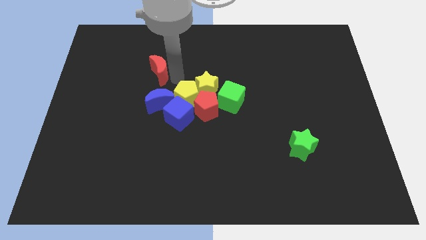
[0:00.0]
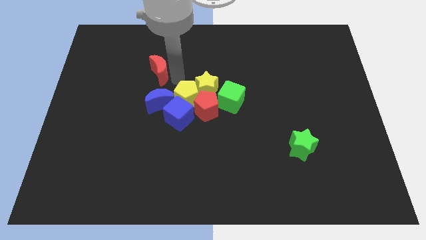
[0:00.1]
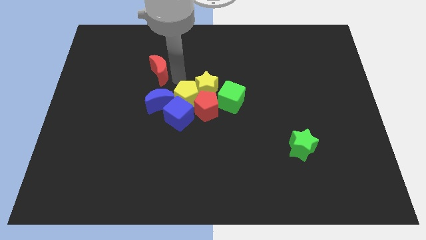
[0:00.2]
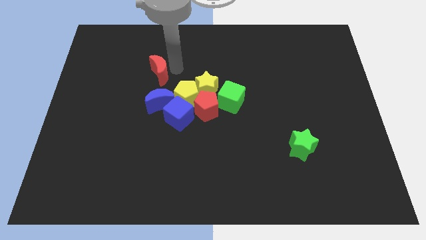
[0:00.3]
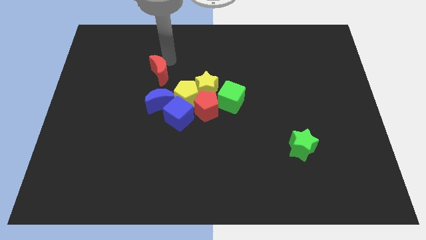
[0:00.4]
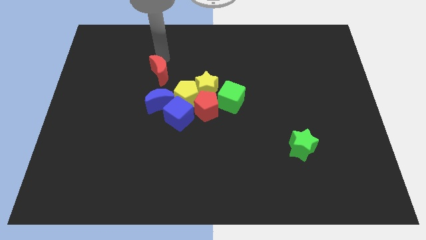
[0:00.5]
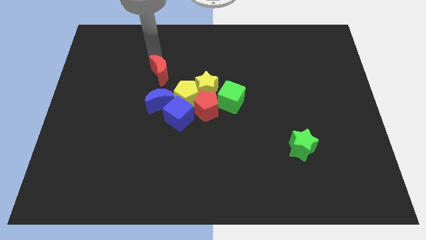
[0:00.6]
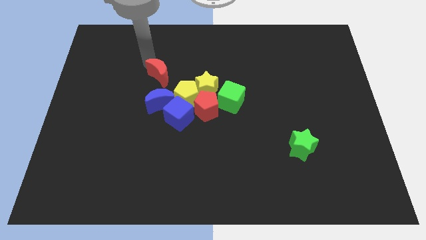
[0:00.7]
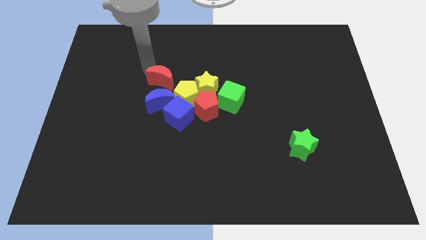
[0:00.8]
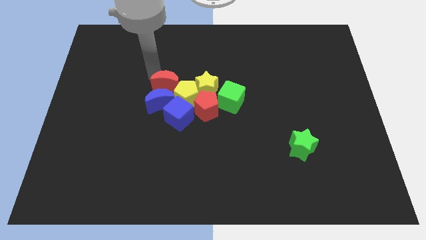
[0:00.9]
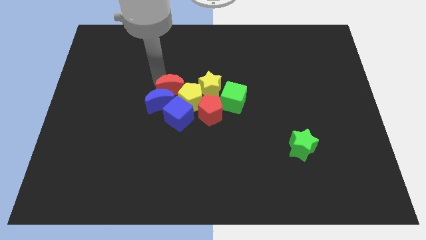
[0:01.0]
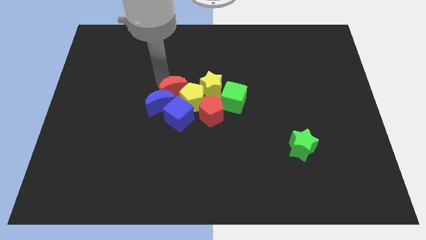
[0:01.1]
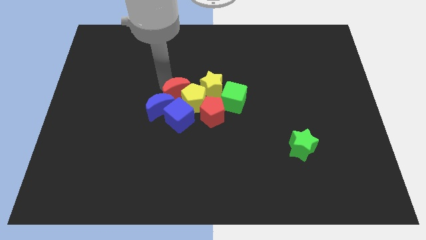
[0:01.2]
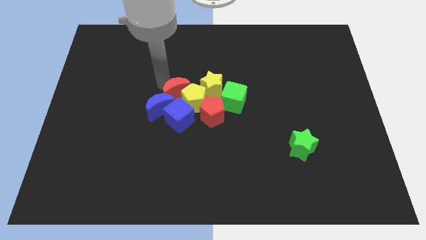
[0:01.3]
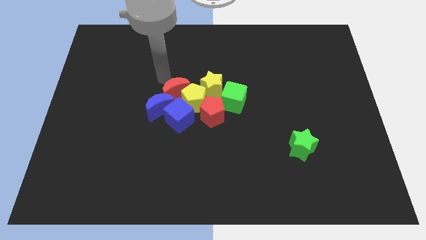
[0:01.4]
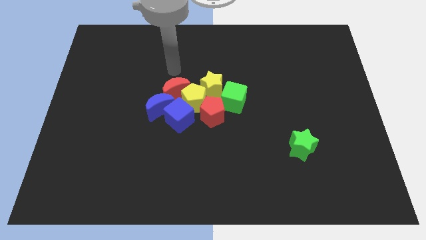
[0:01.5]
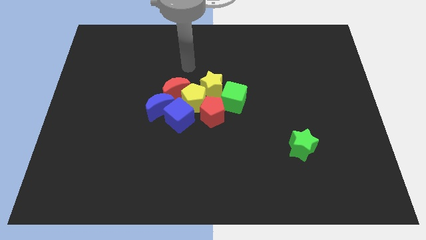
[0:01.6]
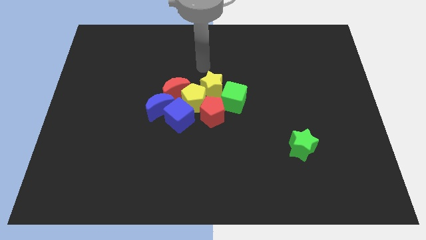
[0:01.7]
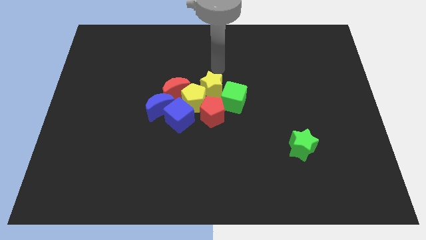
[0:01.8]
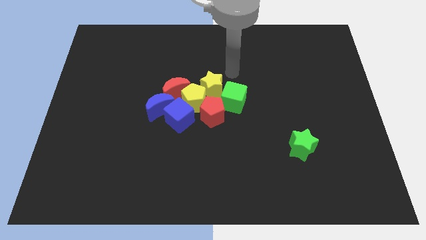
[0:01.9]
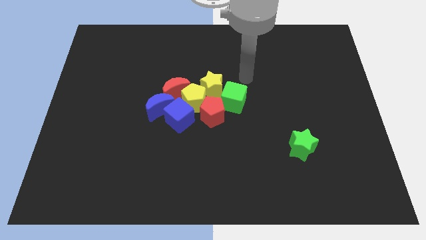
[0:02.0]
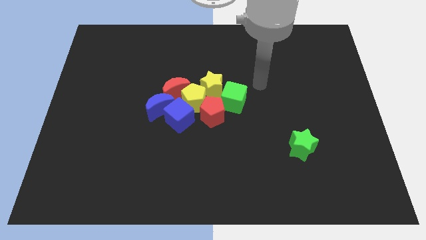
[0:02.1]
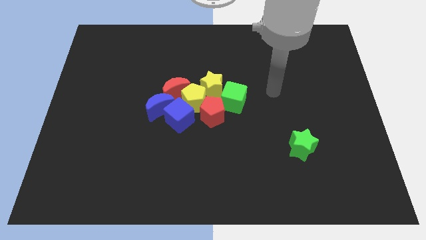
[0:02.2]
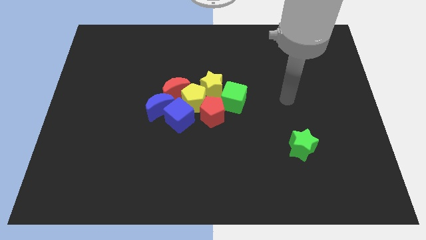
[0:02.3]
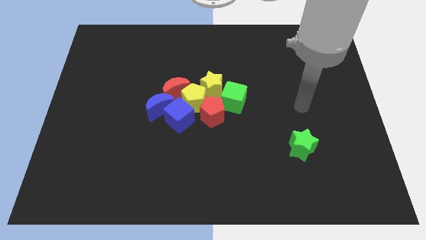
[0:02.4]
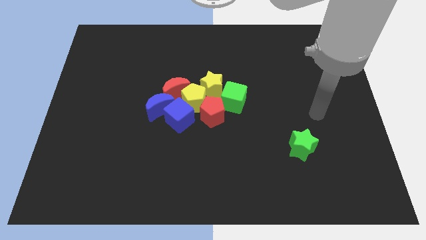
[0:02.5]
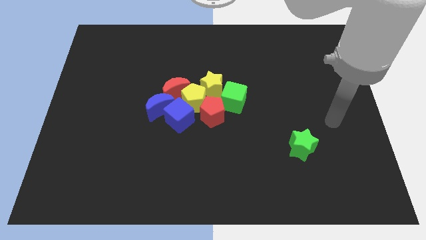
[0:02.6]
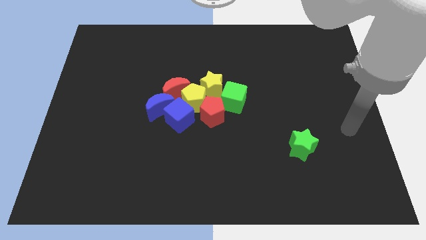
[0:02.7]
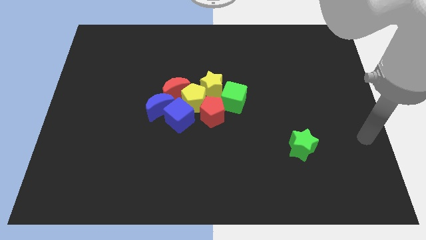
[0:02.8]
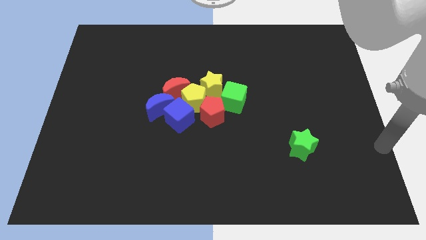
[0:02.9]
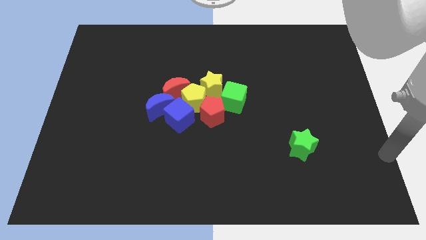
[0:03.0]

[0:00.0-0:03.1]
place the arm on the right side of the board

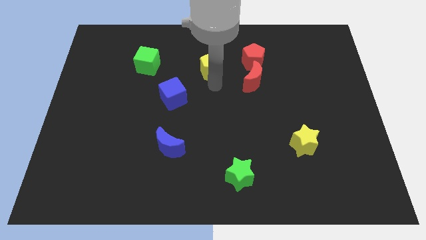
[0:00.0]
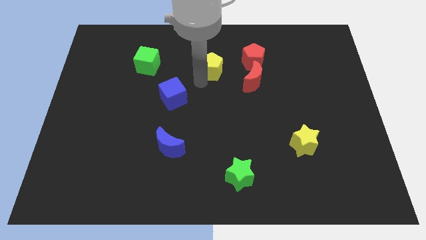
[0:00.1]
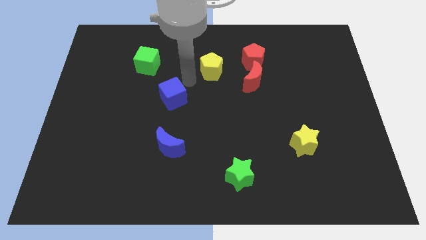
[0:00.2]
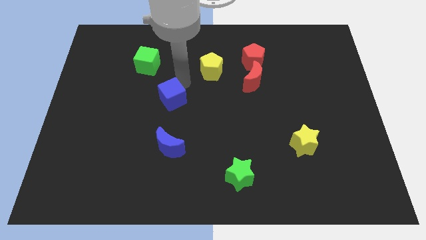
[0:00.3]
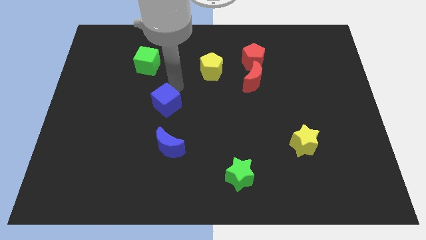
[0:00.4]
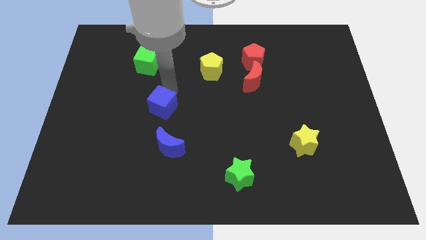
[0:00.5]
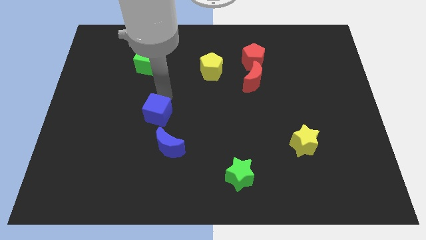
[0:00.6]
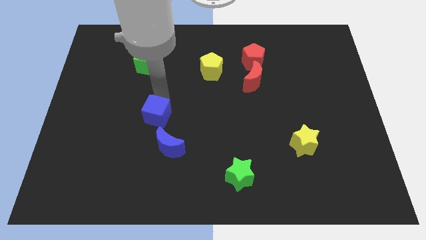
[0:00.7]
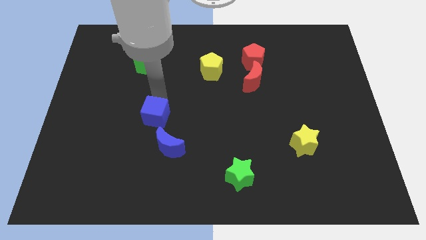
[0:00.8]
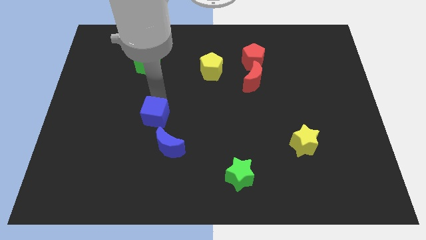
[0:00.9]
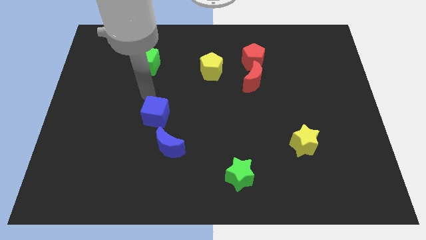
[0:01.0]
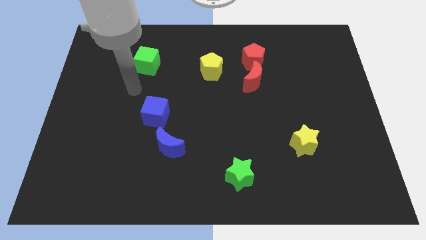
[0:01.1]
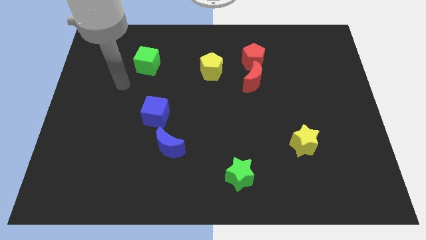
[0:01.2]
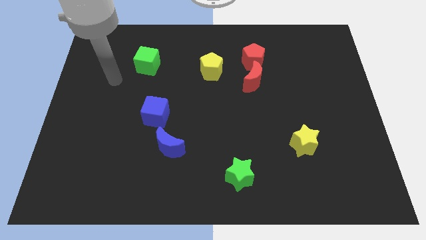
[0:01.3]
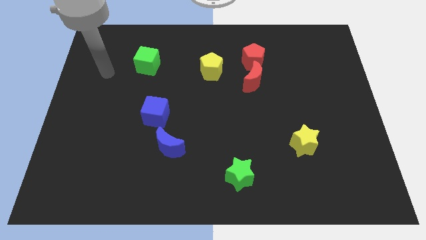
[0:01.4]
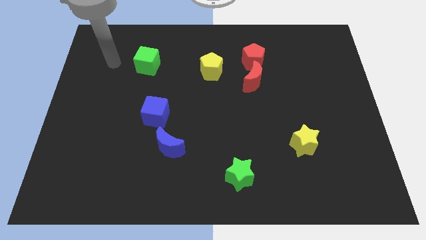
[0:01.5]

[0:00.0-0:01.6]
drag the blue cube close to the blue moon

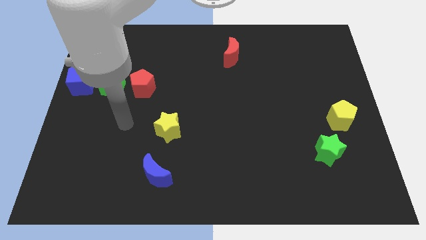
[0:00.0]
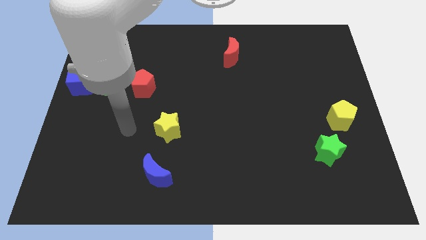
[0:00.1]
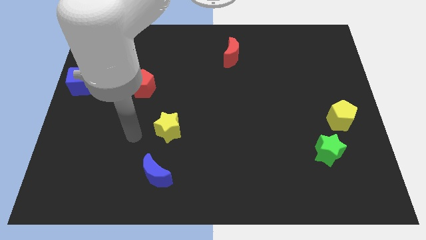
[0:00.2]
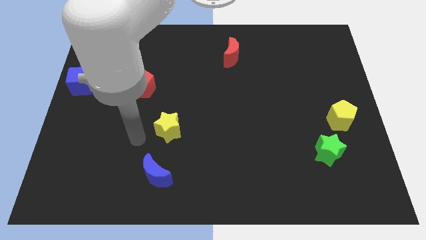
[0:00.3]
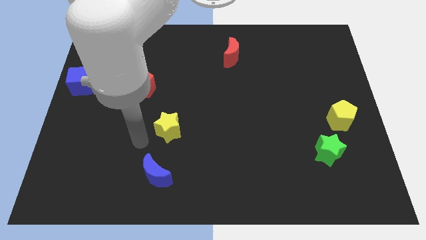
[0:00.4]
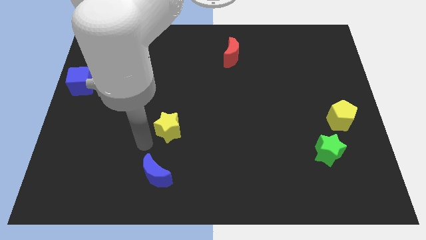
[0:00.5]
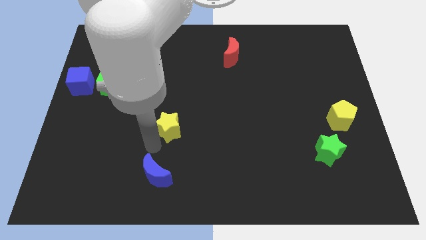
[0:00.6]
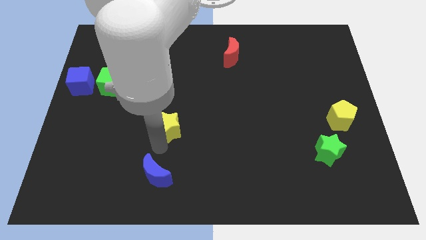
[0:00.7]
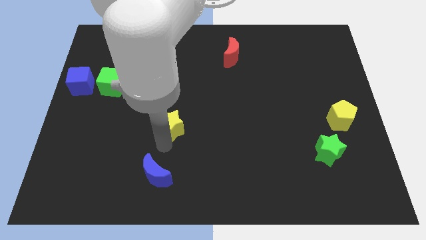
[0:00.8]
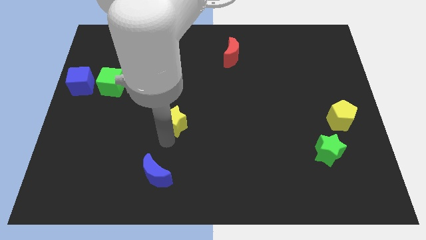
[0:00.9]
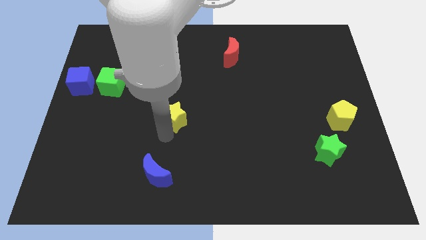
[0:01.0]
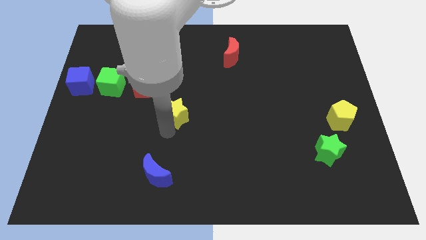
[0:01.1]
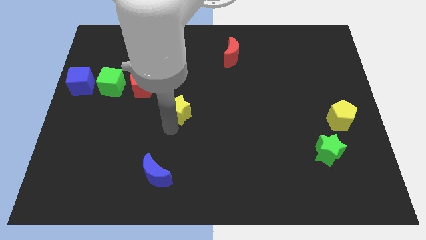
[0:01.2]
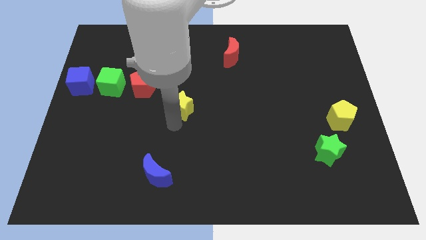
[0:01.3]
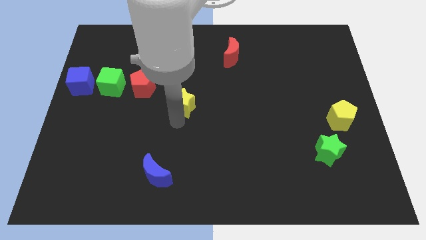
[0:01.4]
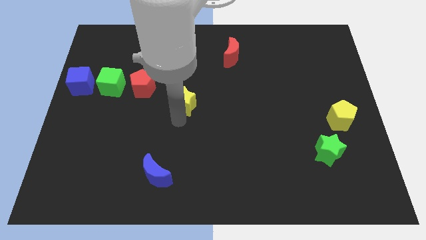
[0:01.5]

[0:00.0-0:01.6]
move the yellow star towards the centre of the board

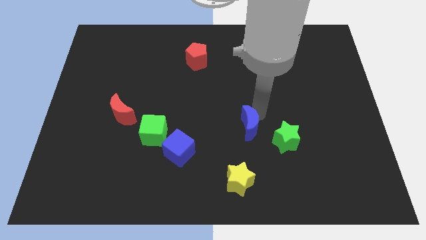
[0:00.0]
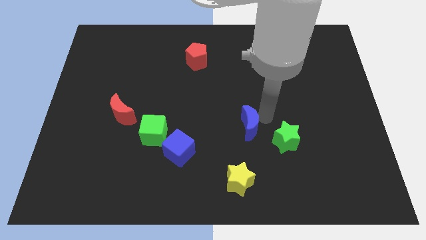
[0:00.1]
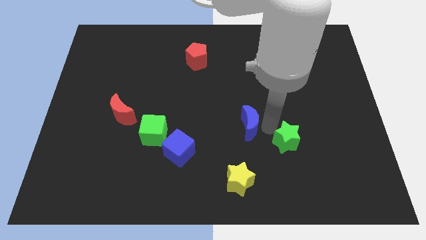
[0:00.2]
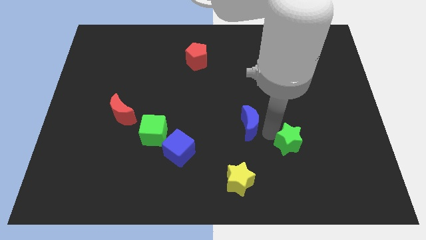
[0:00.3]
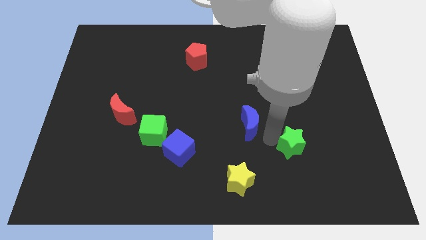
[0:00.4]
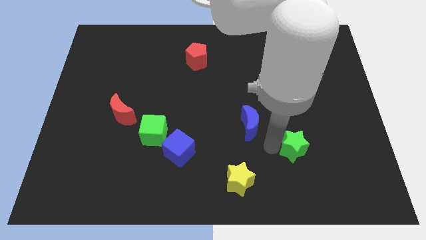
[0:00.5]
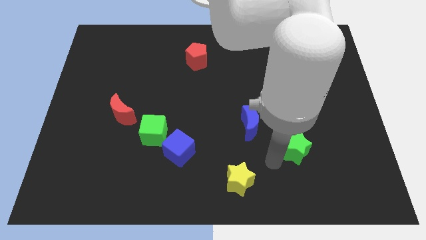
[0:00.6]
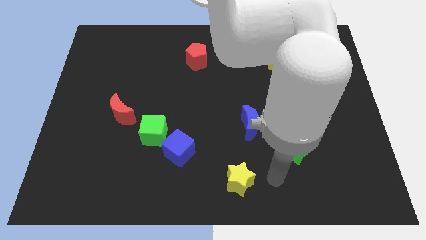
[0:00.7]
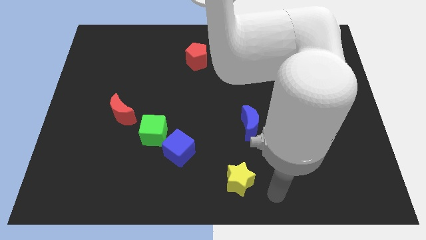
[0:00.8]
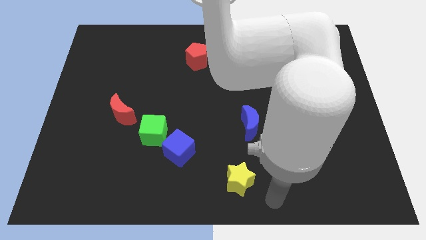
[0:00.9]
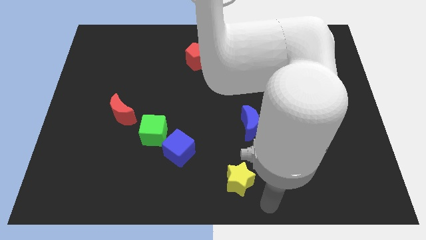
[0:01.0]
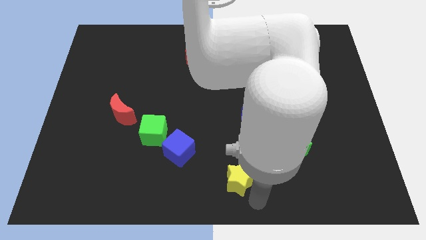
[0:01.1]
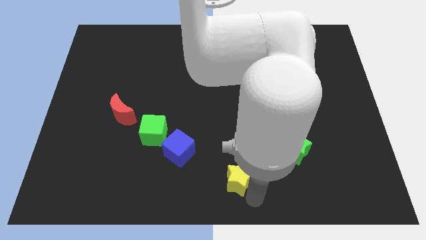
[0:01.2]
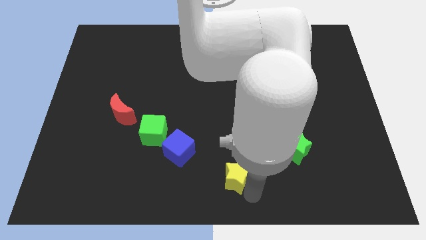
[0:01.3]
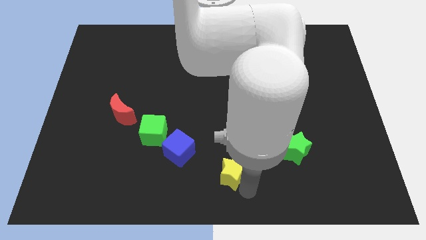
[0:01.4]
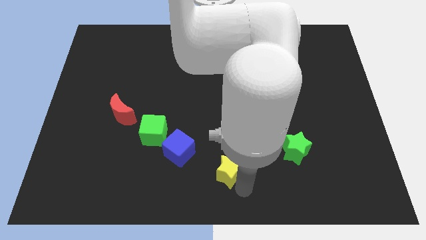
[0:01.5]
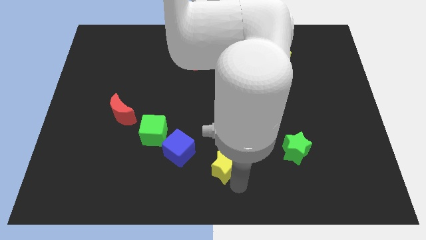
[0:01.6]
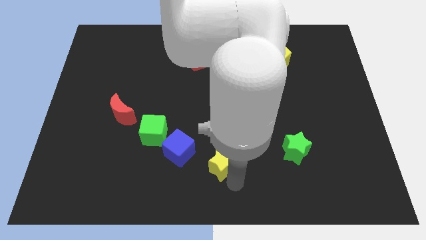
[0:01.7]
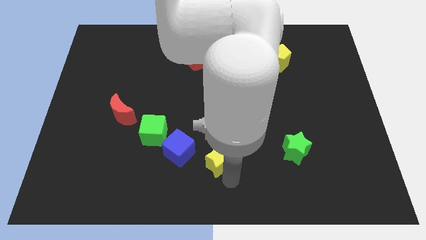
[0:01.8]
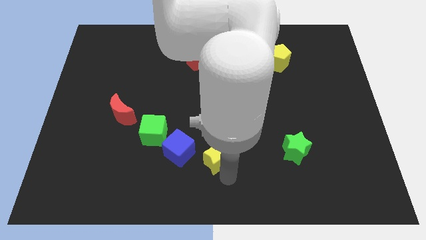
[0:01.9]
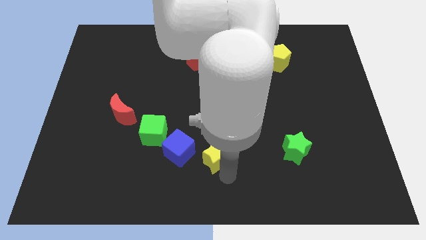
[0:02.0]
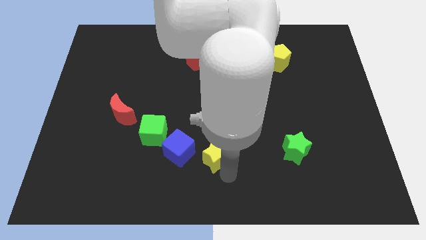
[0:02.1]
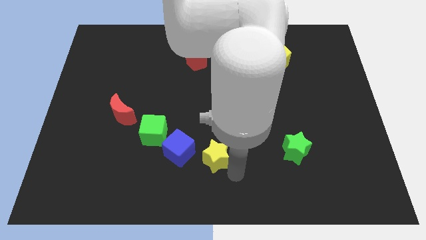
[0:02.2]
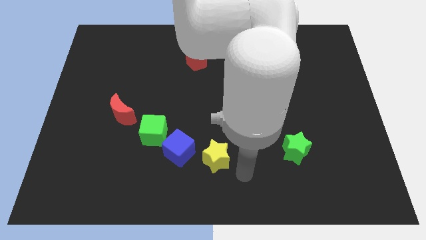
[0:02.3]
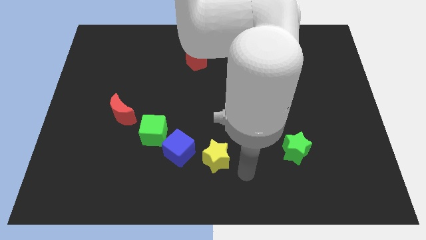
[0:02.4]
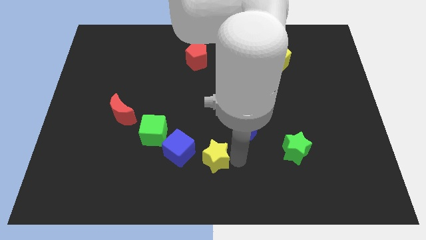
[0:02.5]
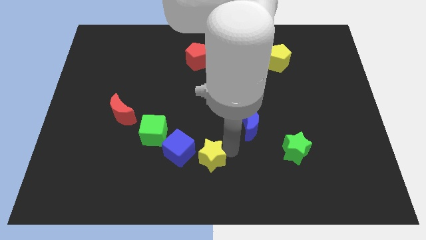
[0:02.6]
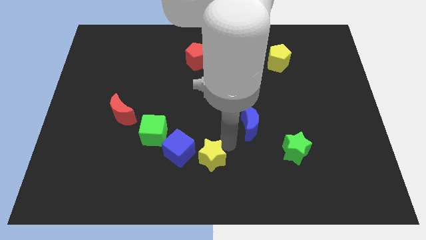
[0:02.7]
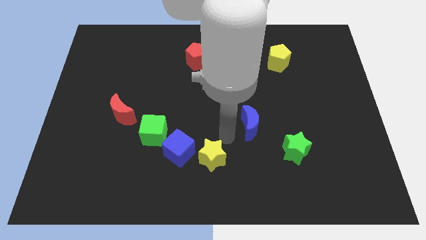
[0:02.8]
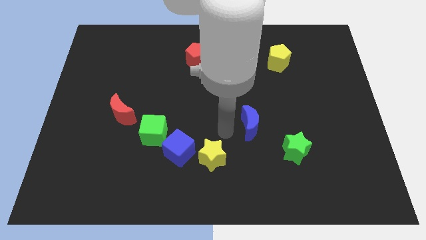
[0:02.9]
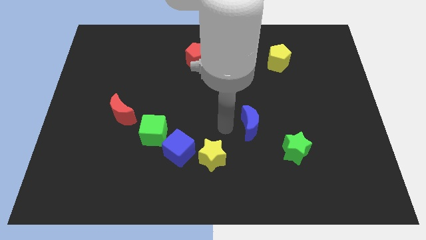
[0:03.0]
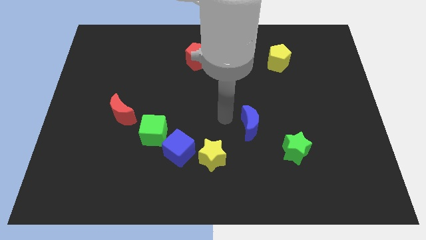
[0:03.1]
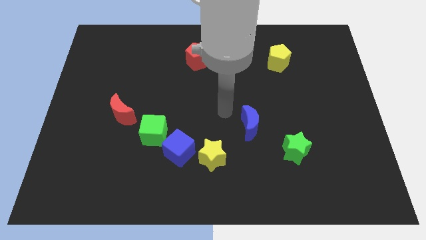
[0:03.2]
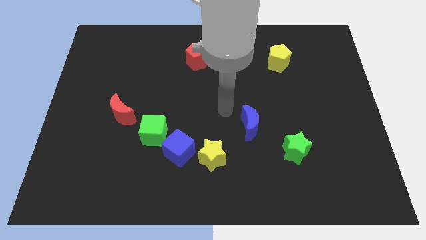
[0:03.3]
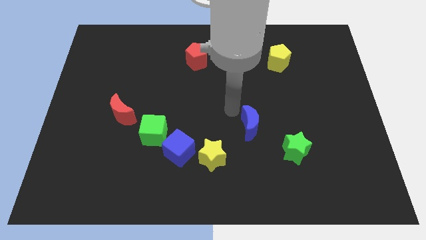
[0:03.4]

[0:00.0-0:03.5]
move the yellow star at the right side of the blue cube
